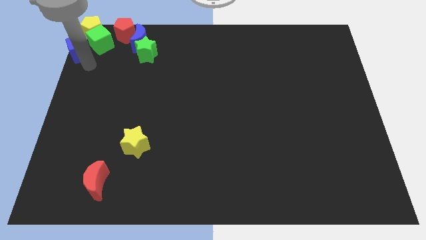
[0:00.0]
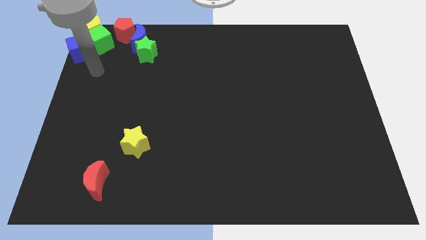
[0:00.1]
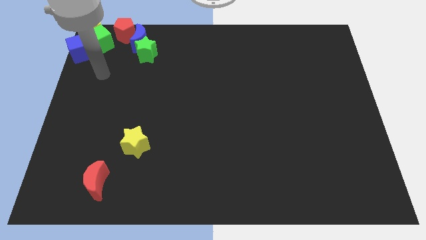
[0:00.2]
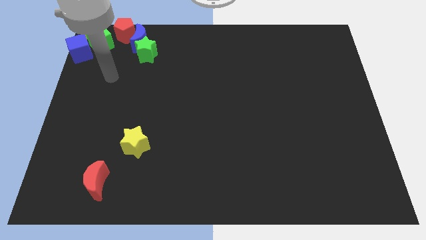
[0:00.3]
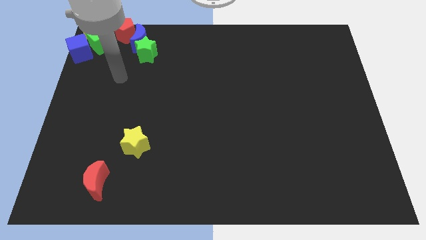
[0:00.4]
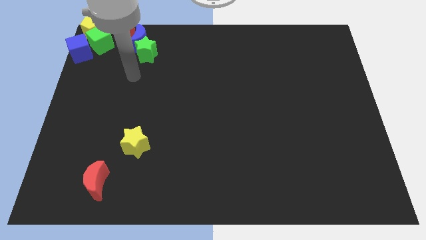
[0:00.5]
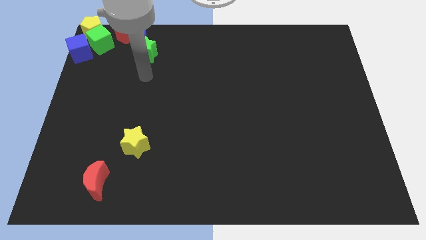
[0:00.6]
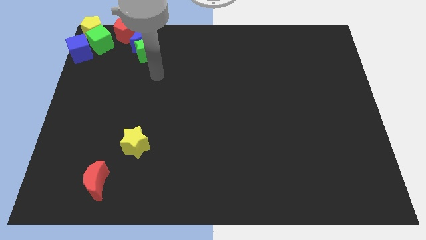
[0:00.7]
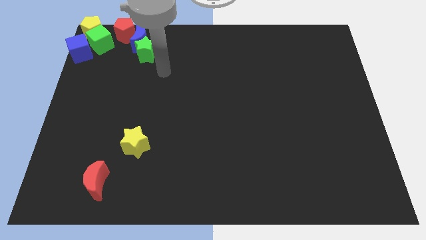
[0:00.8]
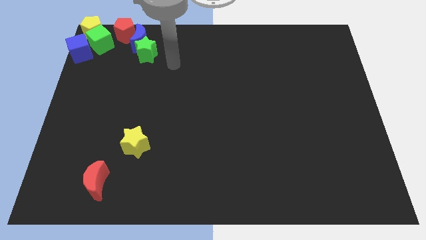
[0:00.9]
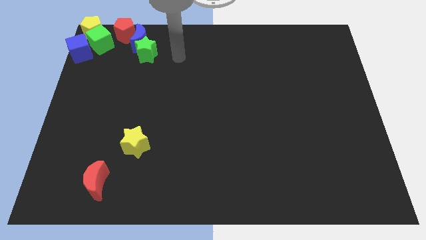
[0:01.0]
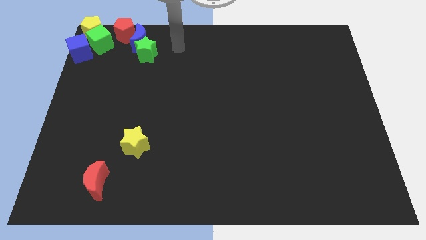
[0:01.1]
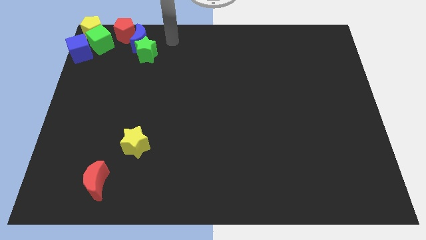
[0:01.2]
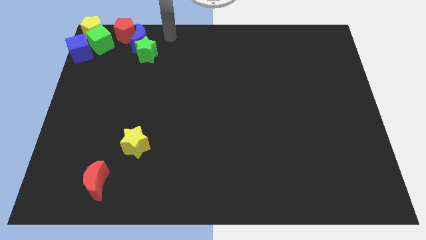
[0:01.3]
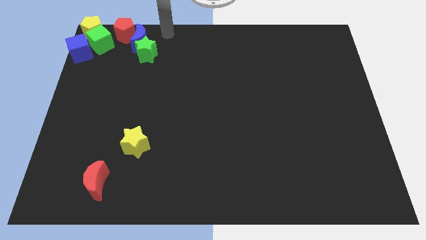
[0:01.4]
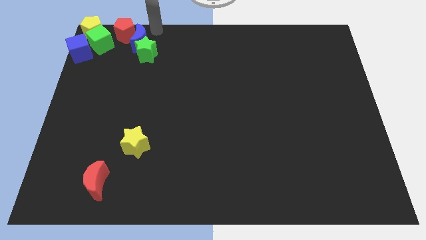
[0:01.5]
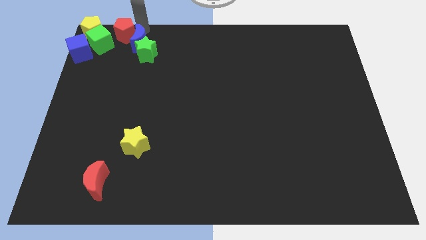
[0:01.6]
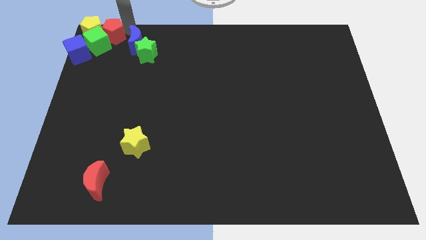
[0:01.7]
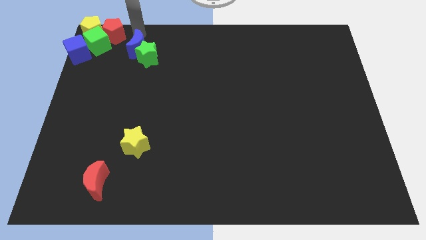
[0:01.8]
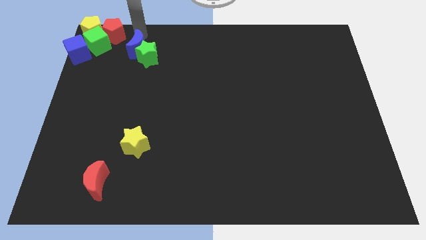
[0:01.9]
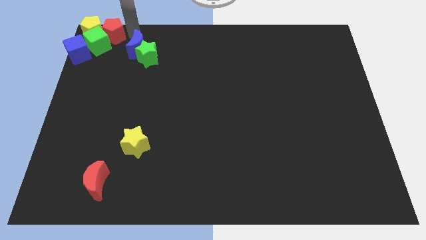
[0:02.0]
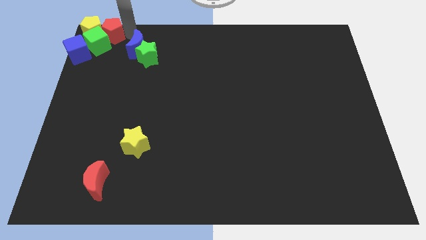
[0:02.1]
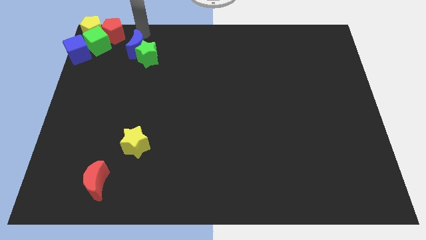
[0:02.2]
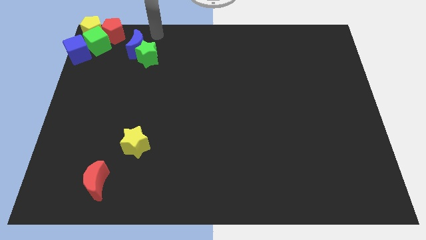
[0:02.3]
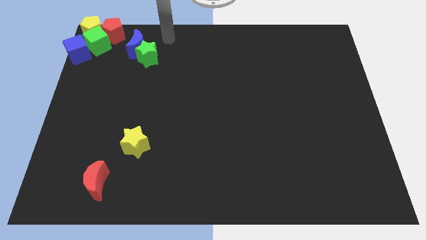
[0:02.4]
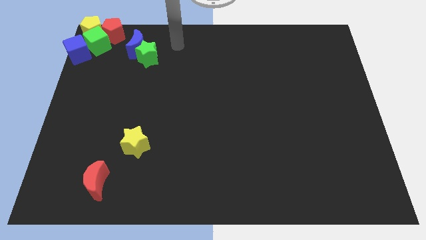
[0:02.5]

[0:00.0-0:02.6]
move red pentagon closer to green cube

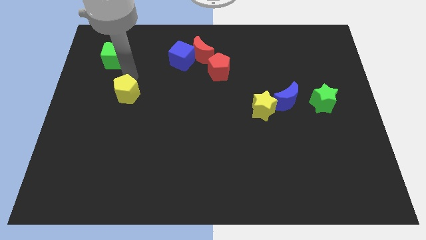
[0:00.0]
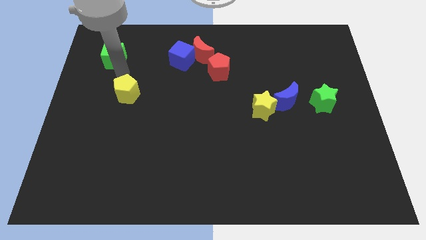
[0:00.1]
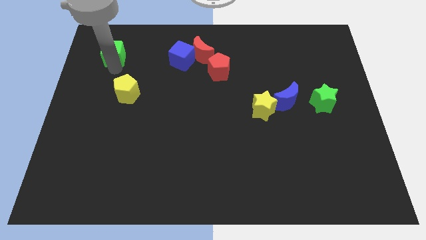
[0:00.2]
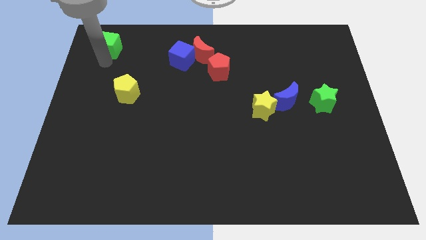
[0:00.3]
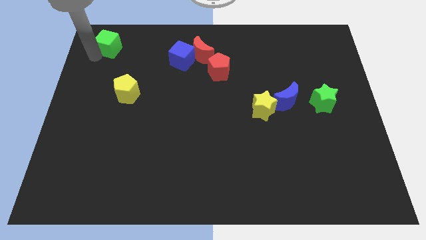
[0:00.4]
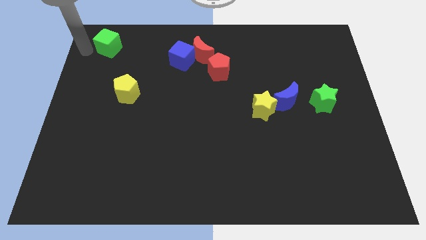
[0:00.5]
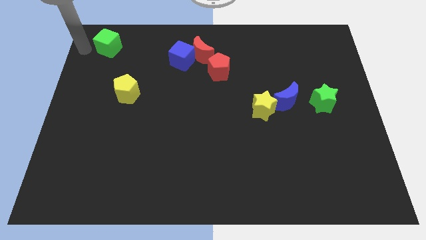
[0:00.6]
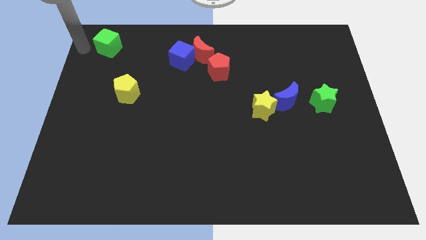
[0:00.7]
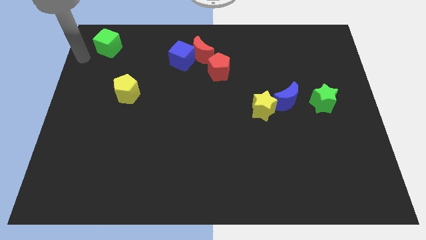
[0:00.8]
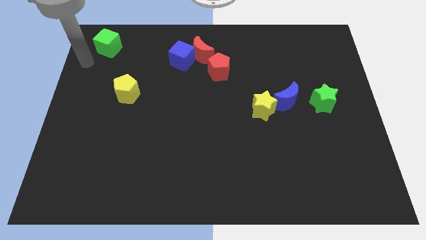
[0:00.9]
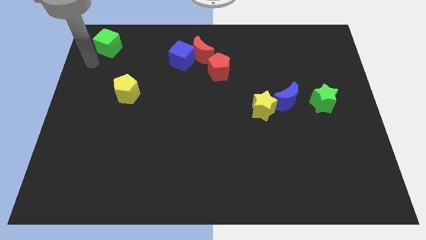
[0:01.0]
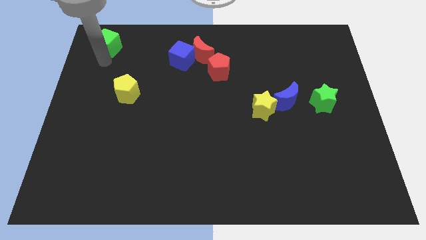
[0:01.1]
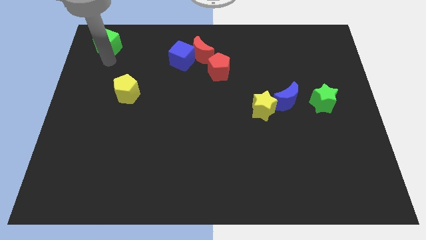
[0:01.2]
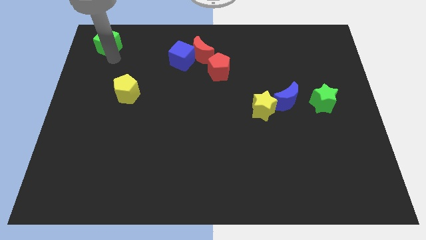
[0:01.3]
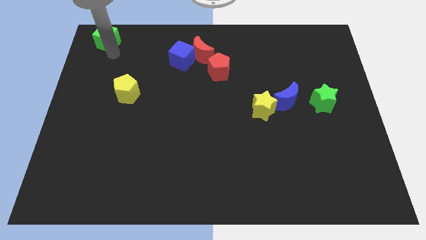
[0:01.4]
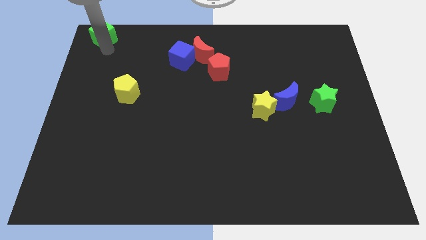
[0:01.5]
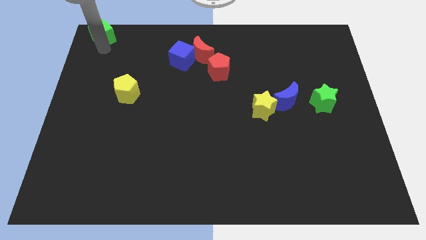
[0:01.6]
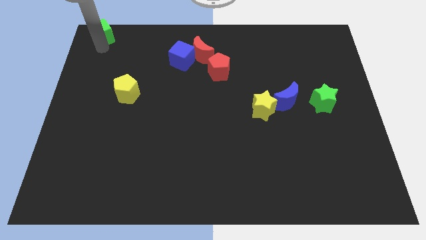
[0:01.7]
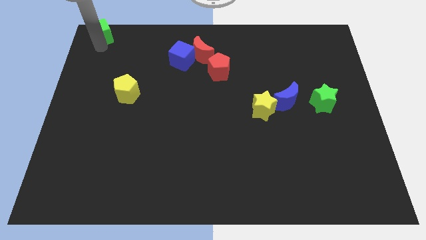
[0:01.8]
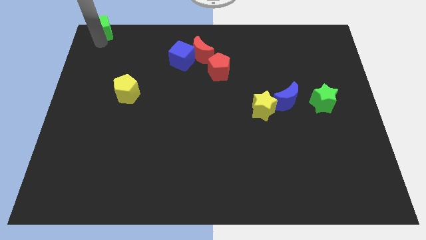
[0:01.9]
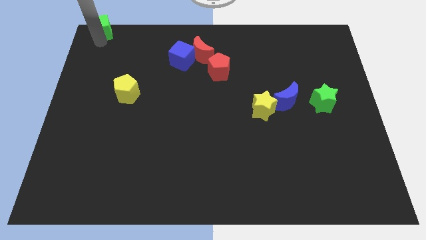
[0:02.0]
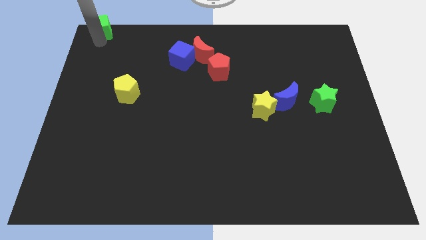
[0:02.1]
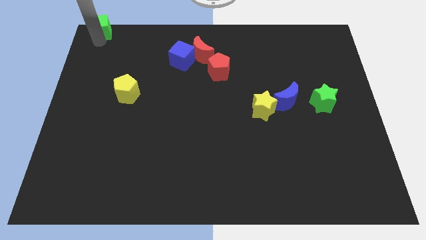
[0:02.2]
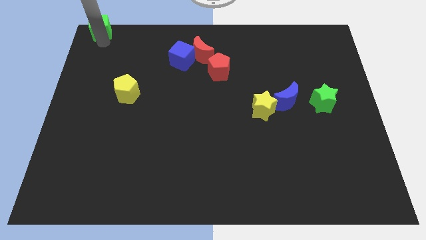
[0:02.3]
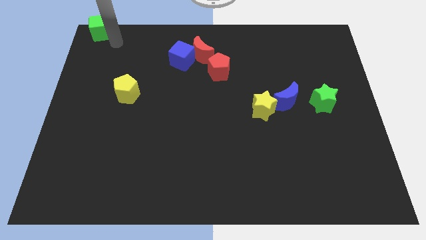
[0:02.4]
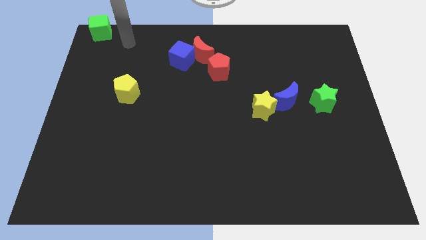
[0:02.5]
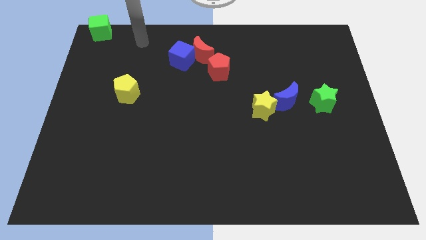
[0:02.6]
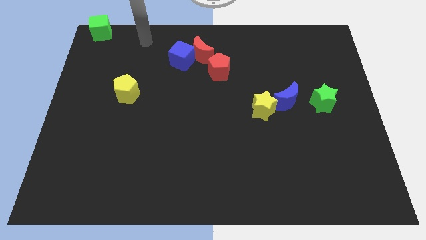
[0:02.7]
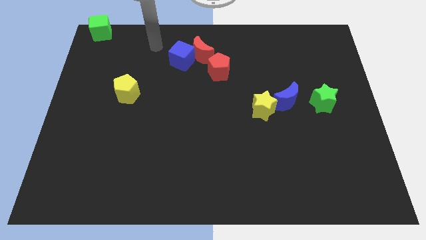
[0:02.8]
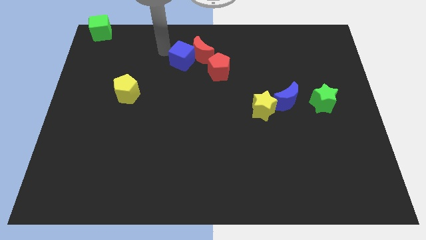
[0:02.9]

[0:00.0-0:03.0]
slide the green cube to the top left corner of the board

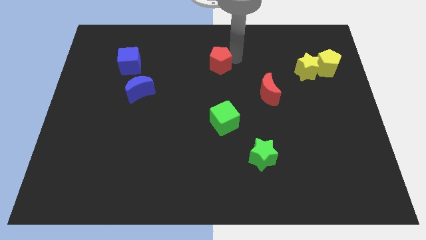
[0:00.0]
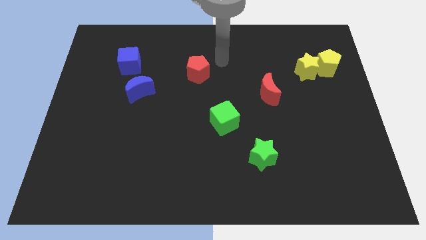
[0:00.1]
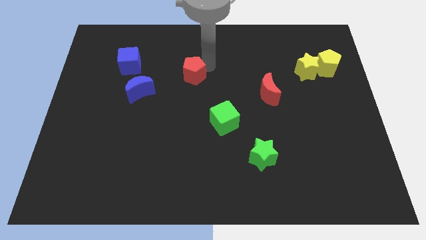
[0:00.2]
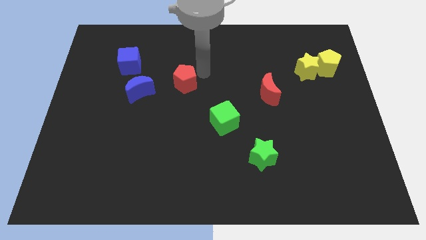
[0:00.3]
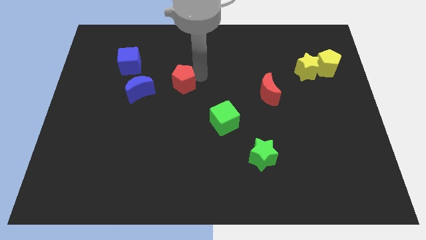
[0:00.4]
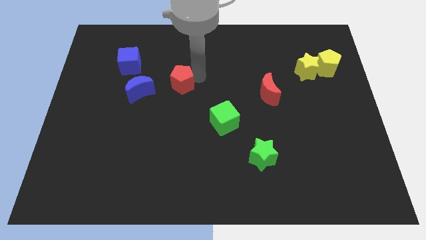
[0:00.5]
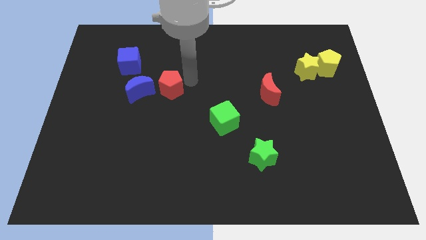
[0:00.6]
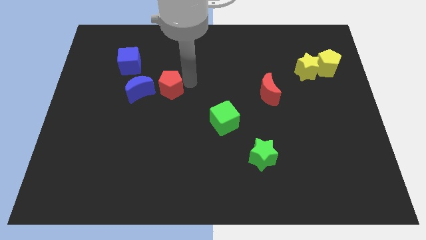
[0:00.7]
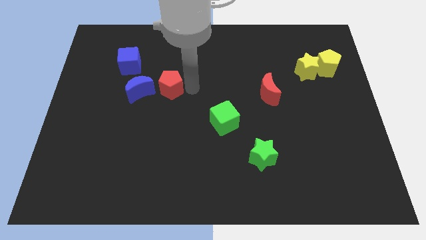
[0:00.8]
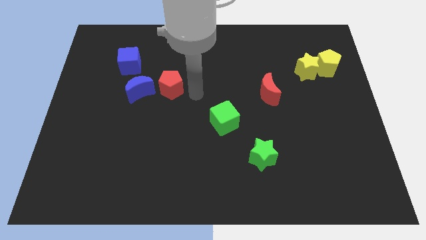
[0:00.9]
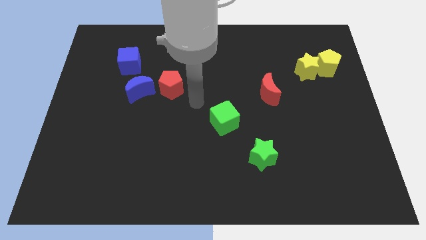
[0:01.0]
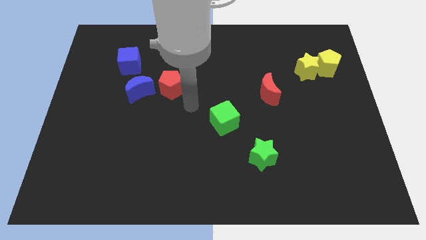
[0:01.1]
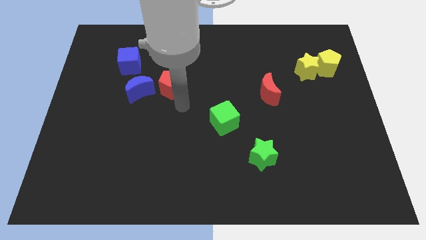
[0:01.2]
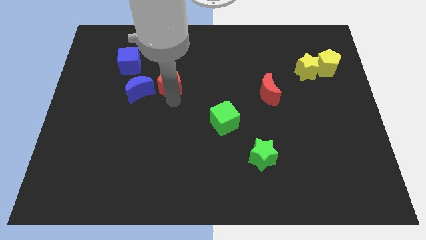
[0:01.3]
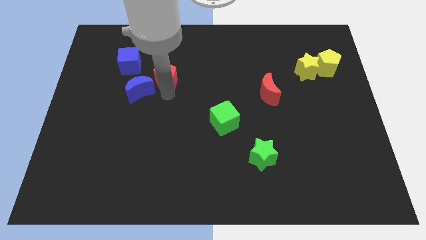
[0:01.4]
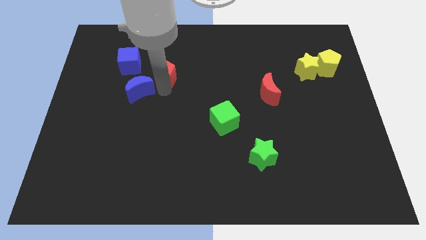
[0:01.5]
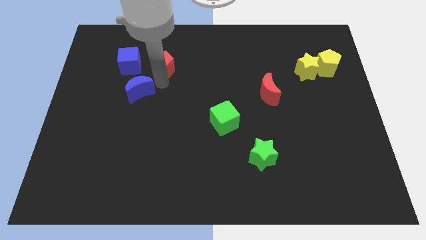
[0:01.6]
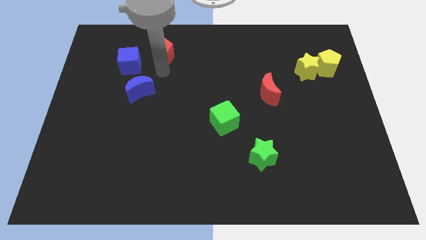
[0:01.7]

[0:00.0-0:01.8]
place the red pentagon at right side of the blue cube

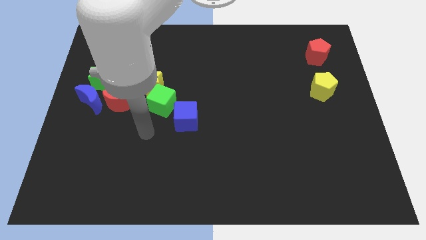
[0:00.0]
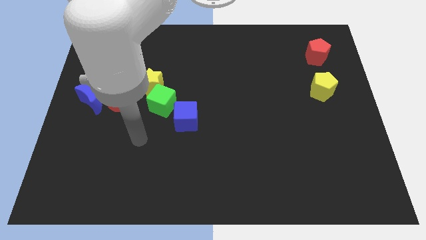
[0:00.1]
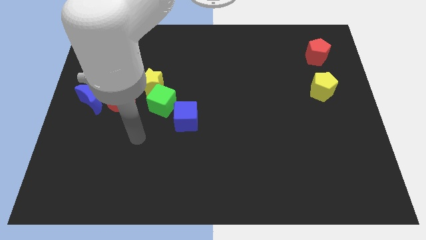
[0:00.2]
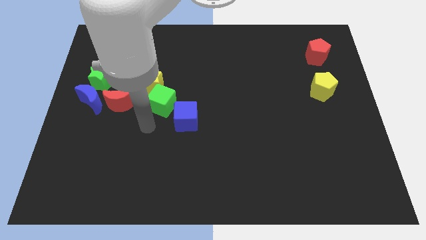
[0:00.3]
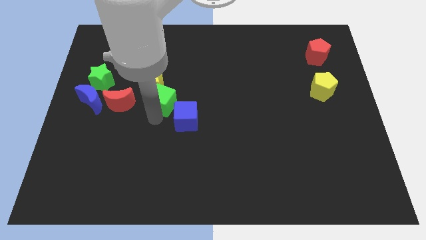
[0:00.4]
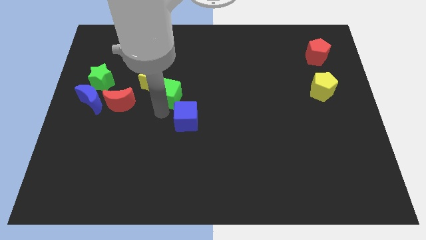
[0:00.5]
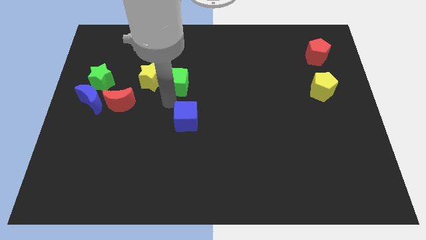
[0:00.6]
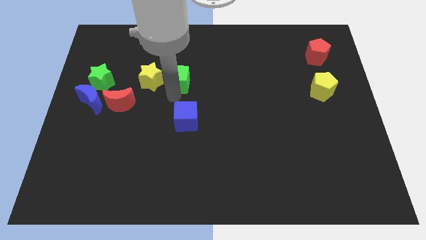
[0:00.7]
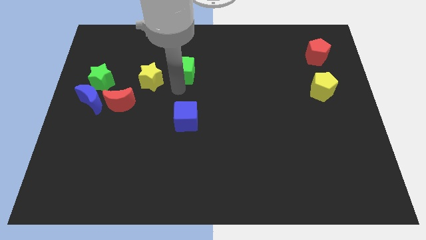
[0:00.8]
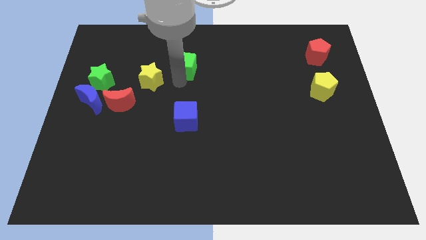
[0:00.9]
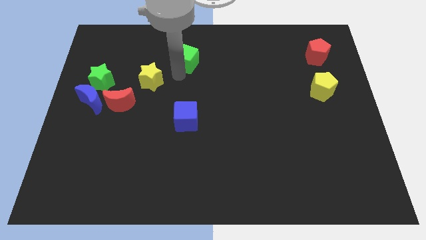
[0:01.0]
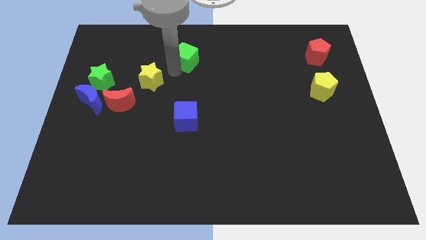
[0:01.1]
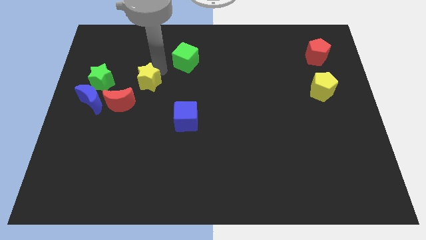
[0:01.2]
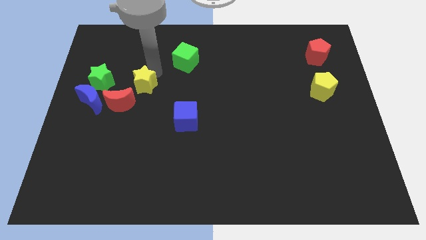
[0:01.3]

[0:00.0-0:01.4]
place the green cube above the blue cube

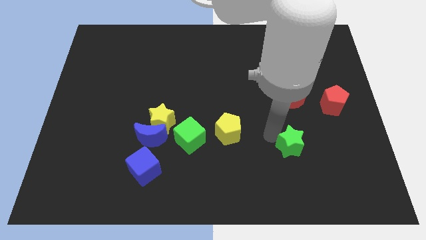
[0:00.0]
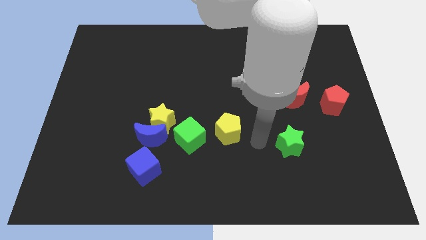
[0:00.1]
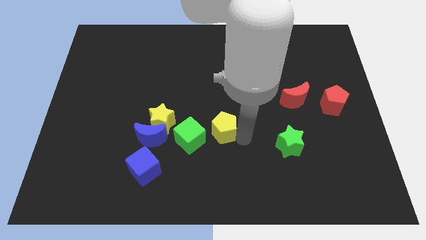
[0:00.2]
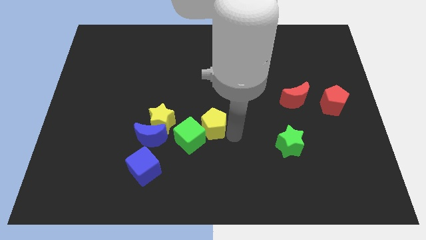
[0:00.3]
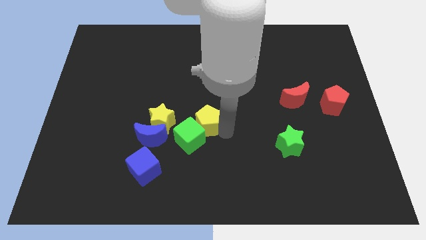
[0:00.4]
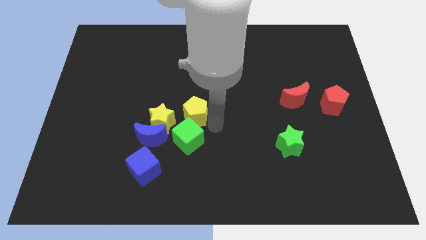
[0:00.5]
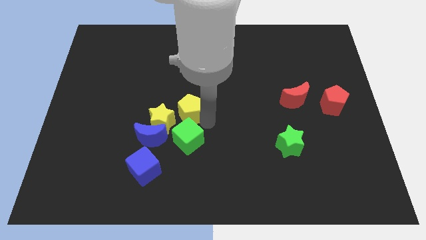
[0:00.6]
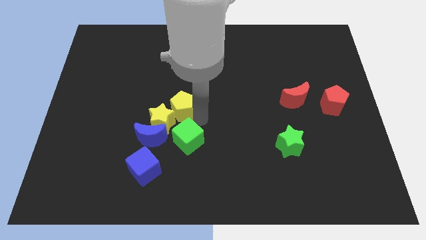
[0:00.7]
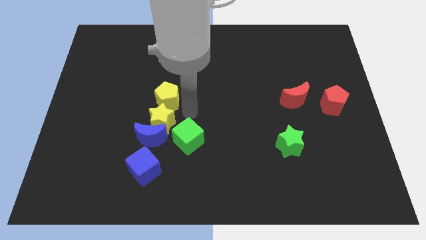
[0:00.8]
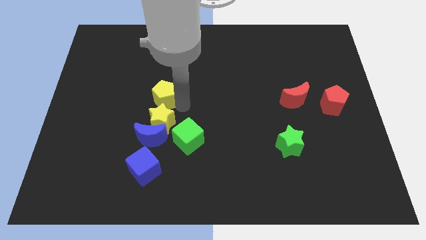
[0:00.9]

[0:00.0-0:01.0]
place the yellow pentagon above the yellow star
